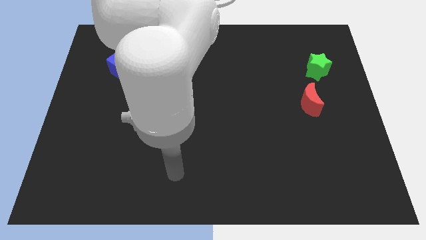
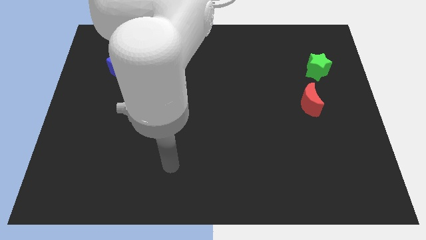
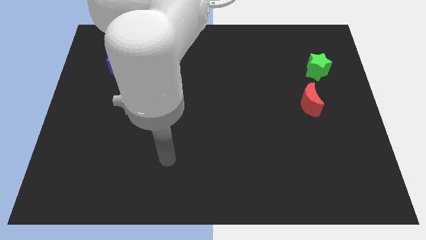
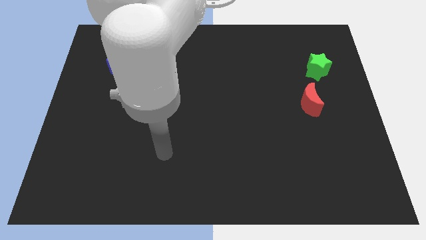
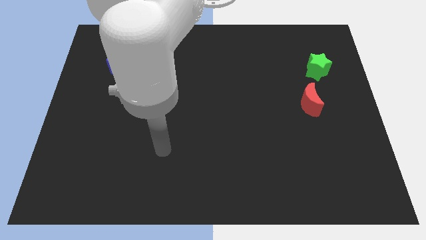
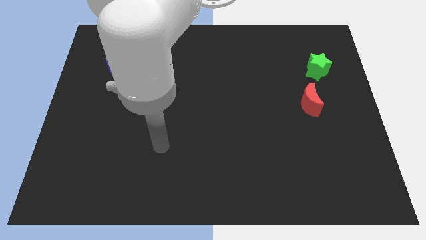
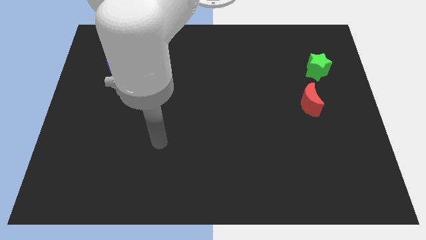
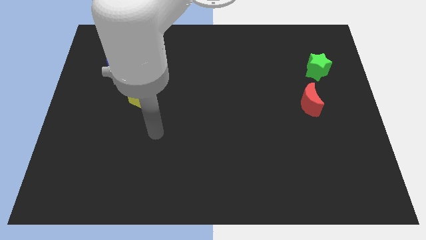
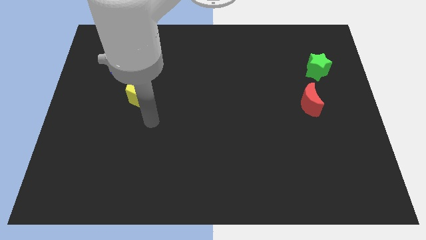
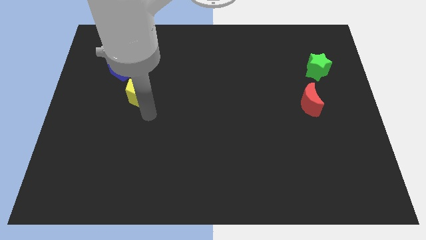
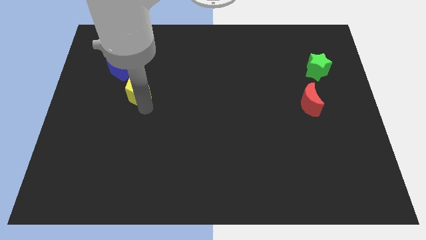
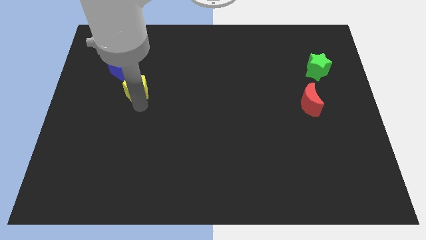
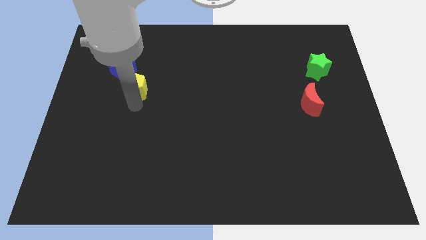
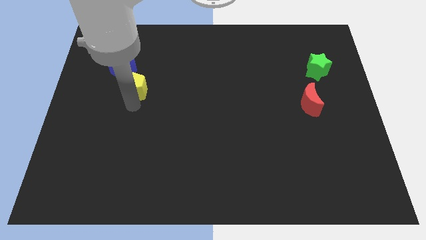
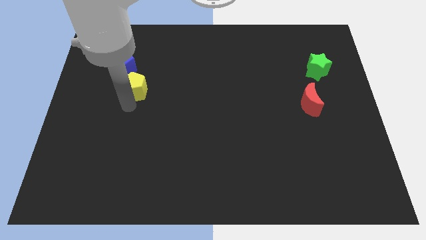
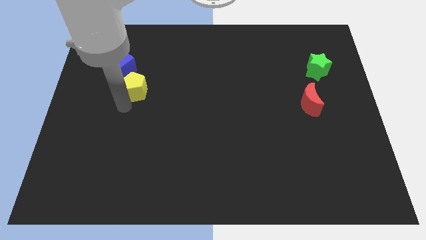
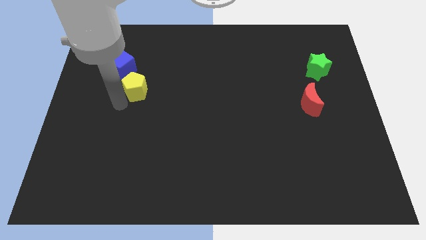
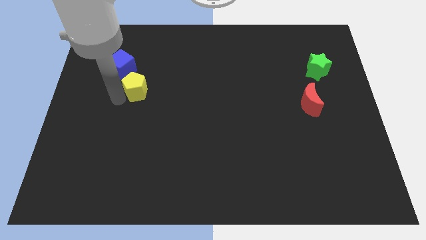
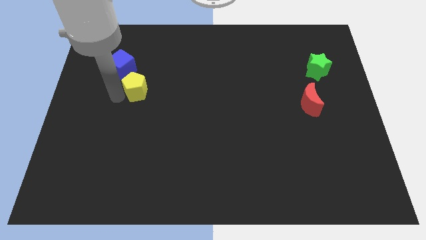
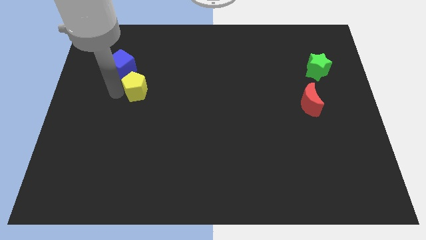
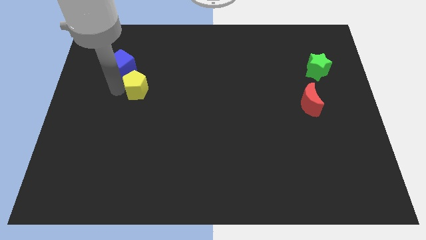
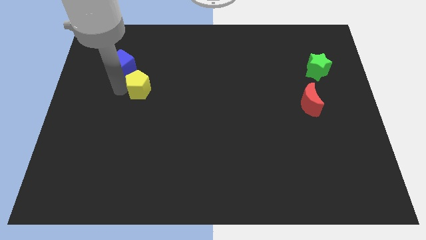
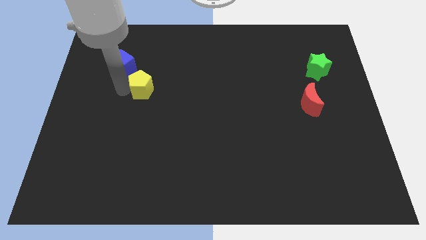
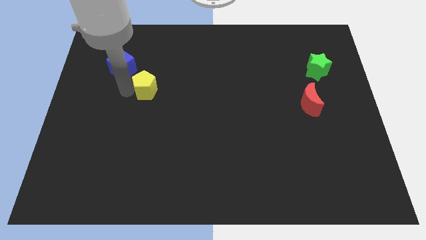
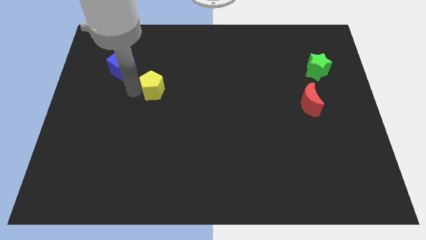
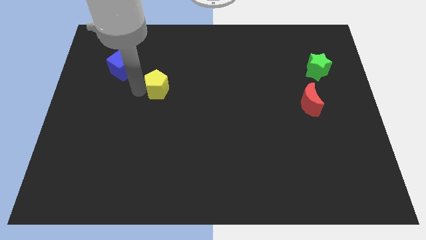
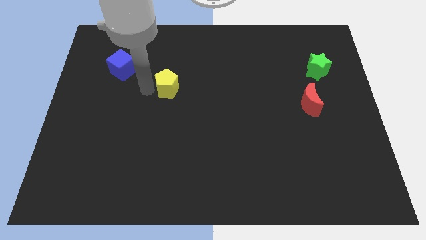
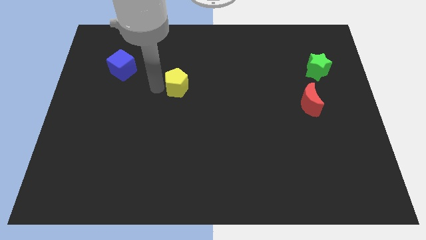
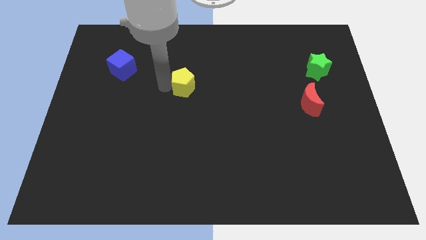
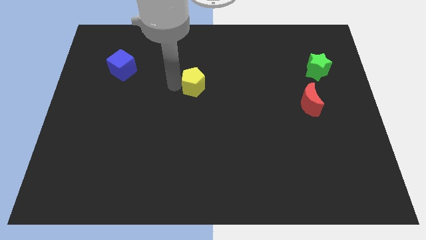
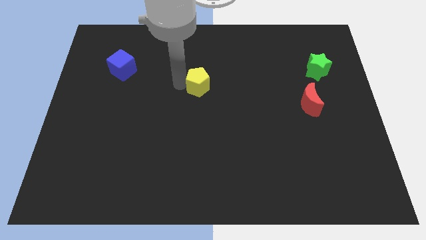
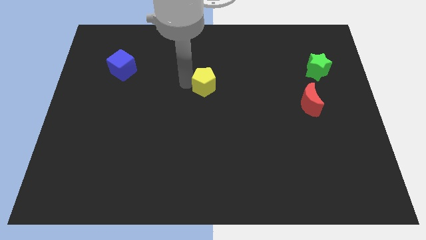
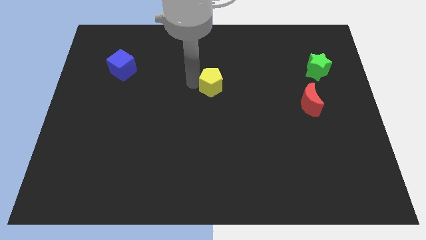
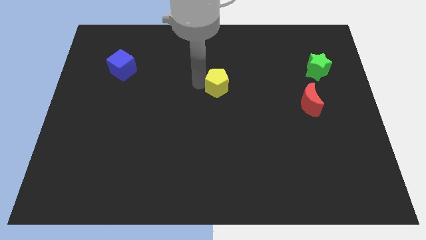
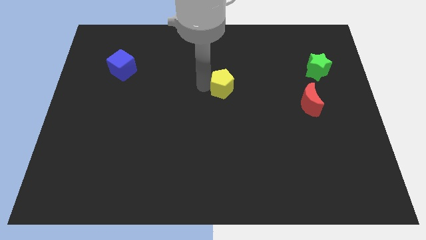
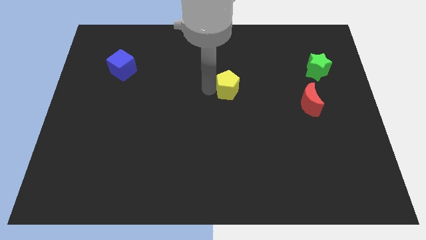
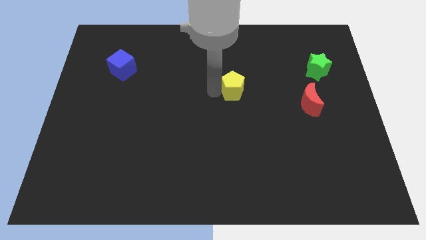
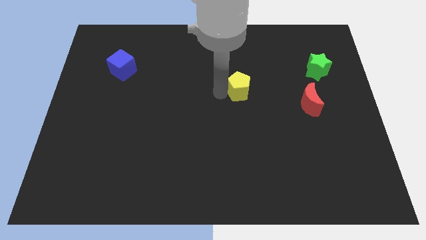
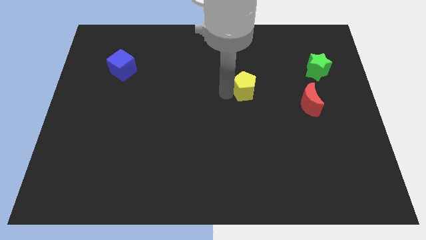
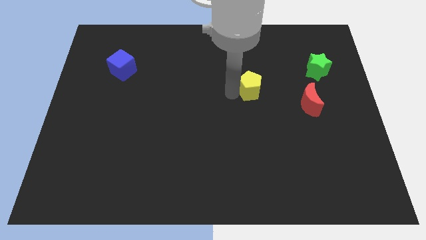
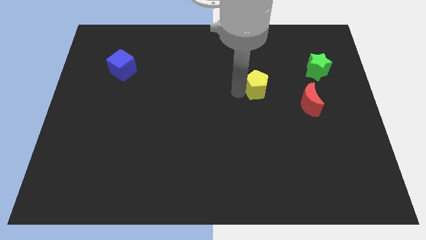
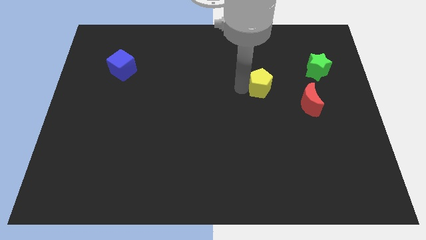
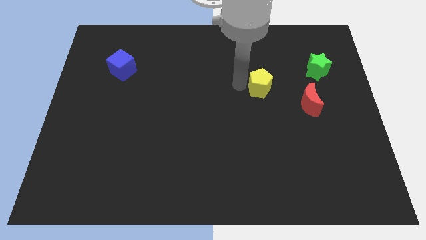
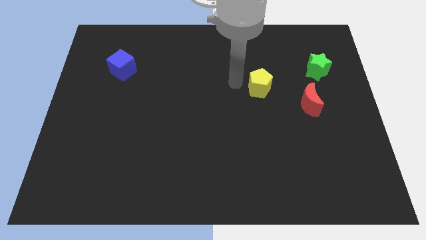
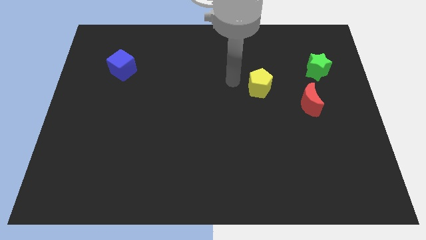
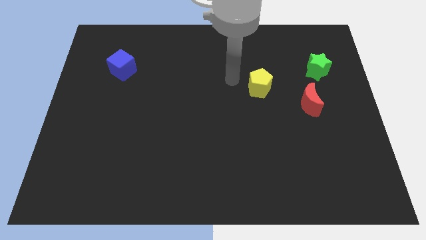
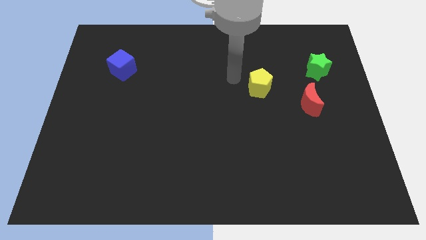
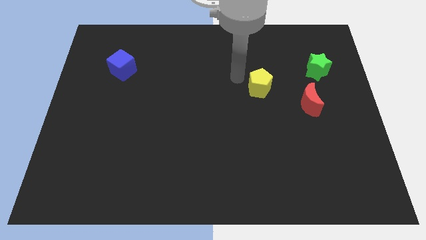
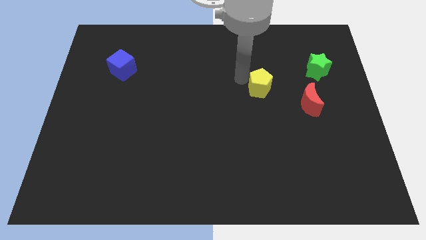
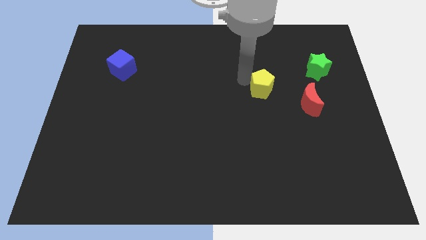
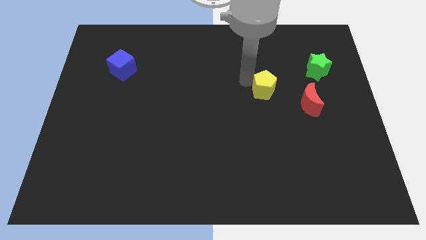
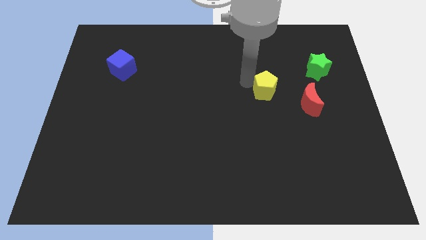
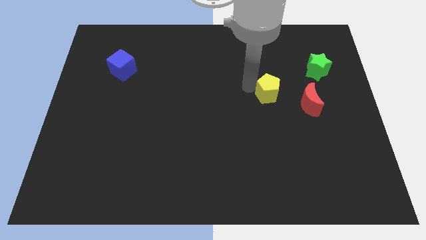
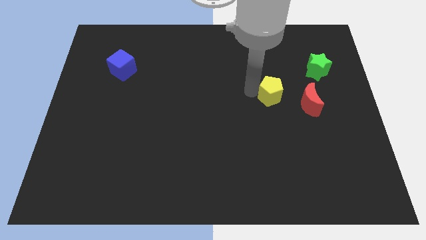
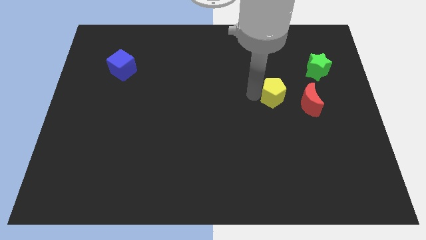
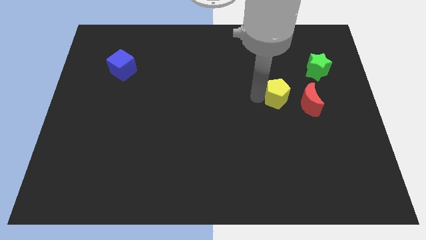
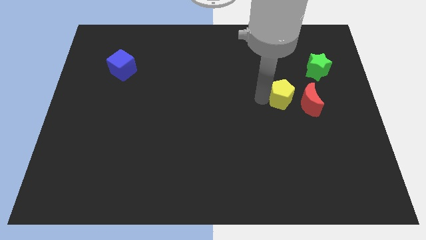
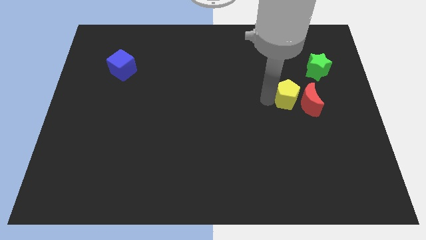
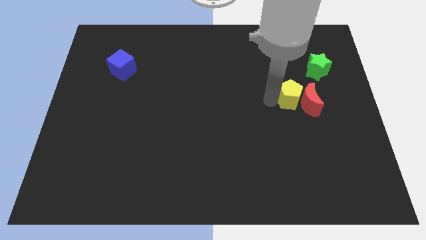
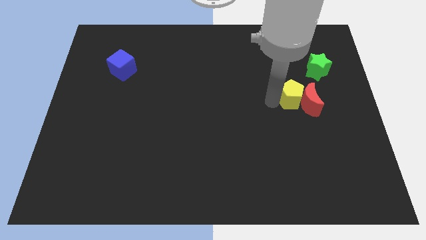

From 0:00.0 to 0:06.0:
move the yellow block close to the red moon

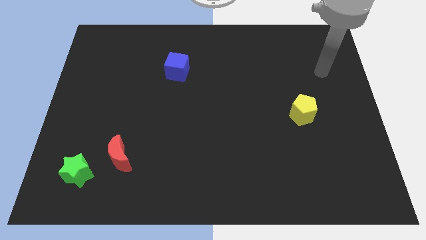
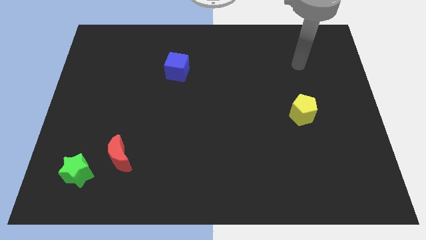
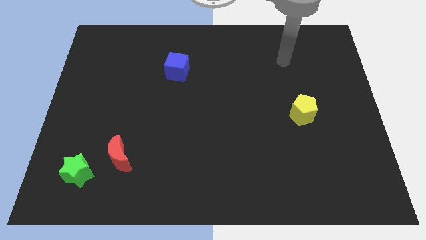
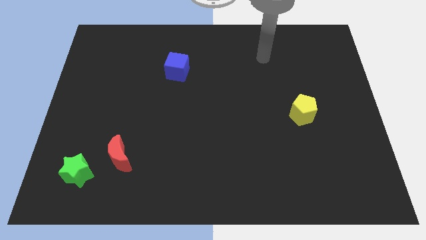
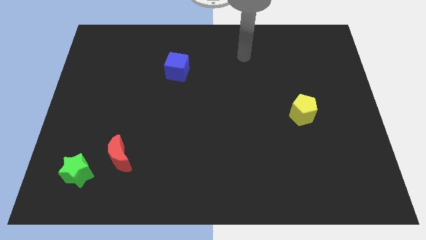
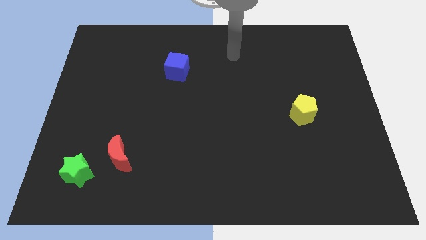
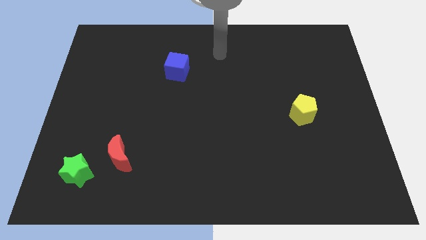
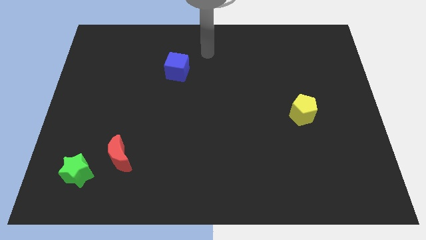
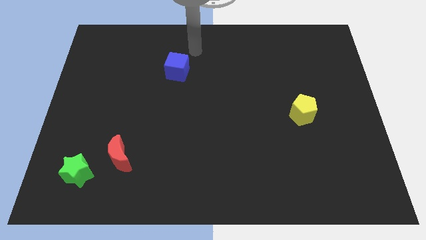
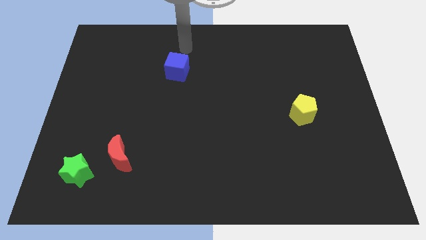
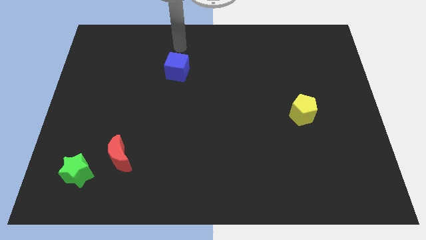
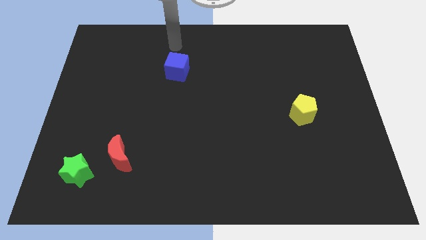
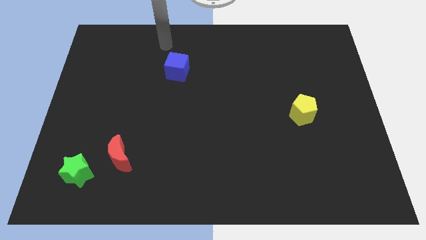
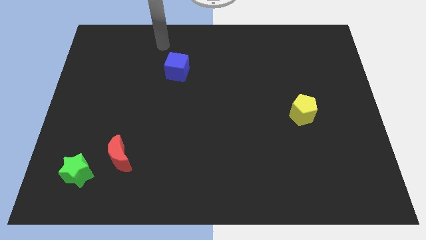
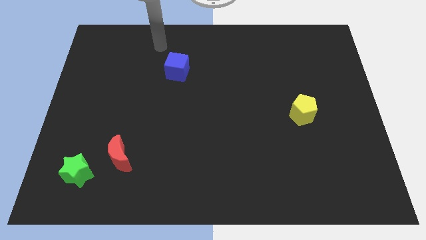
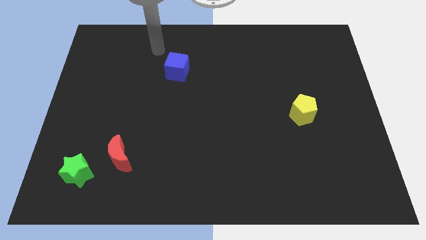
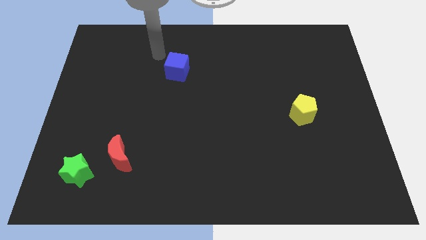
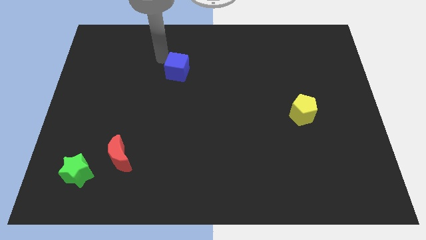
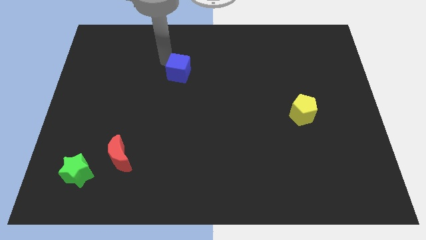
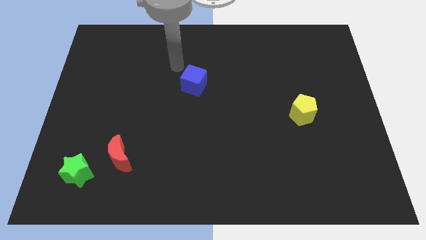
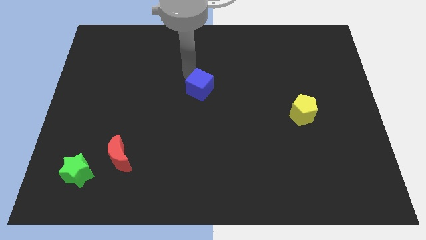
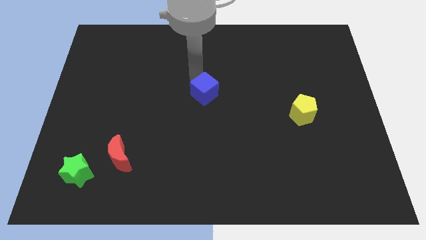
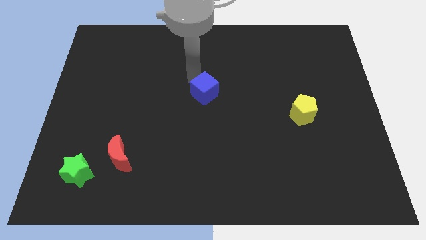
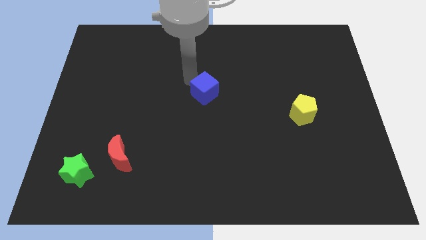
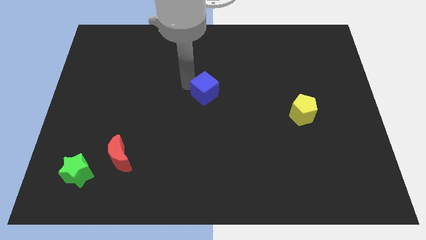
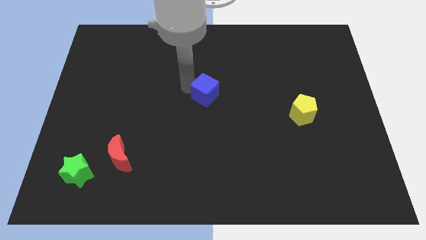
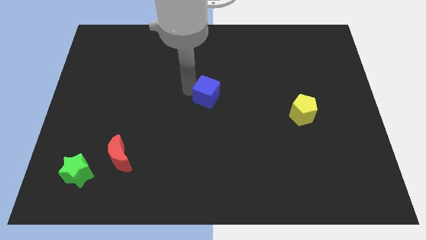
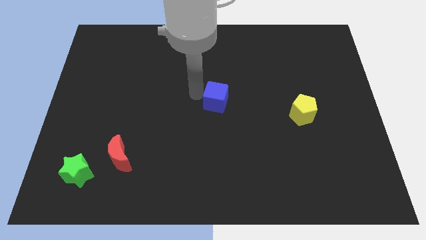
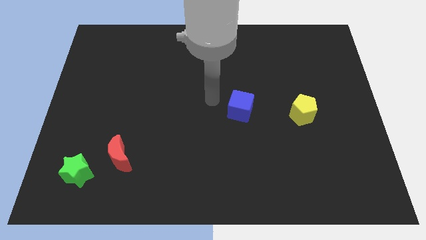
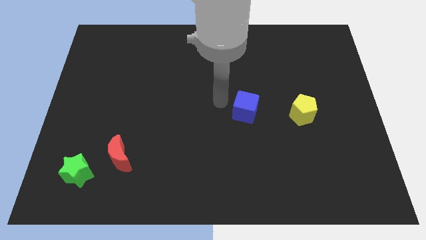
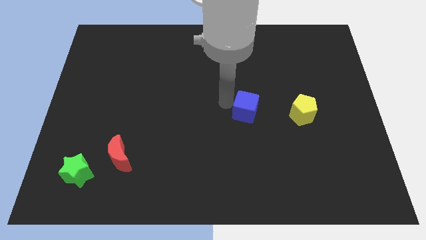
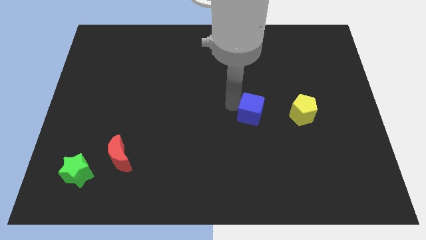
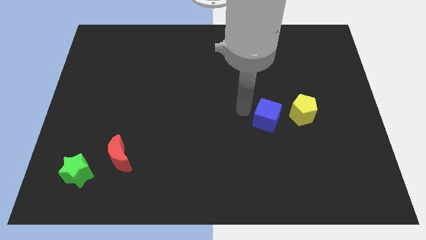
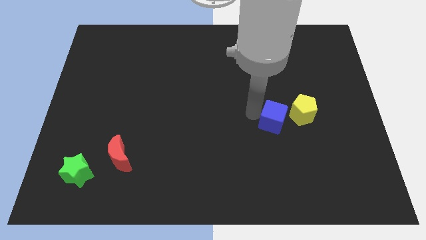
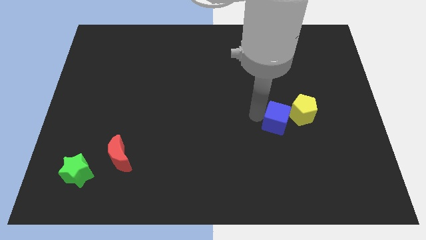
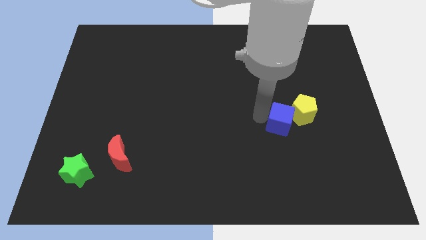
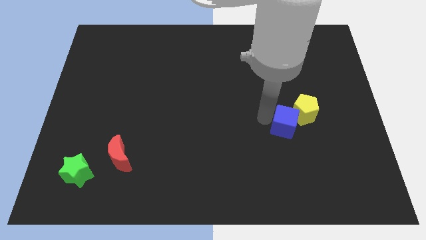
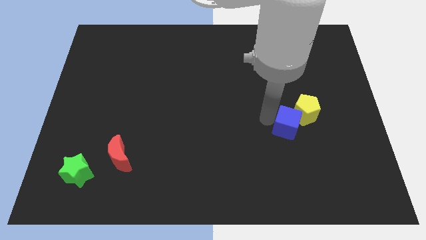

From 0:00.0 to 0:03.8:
put the blue cube next to the yellow pentagon
